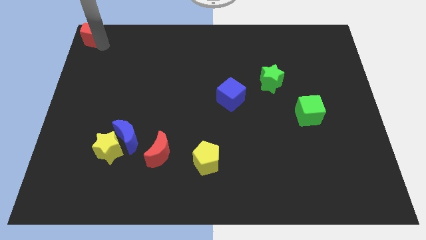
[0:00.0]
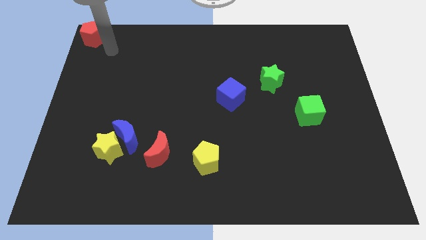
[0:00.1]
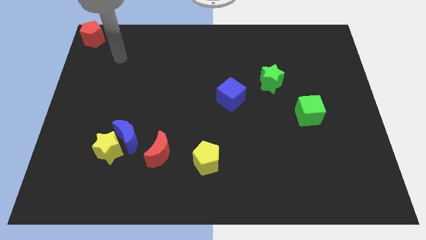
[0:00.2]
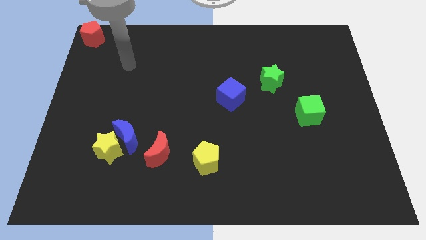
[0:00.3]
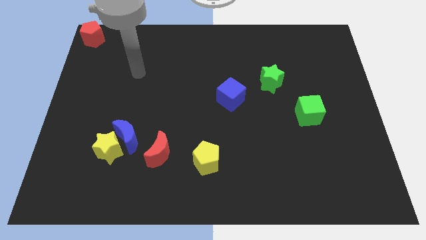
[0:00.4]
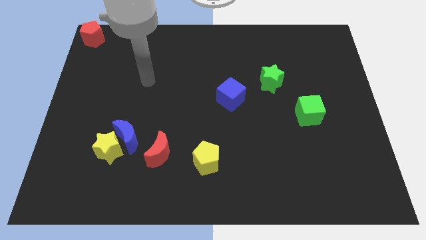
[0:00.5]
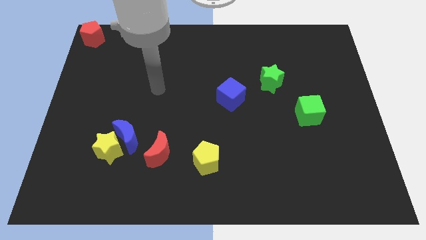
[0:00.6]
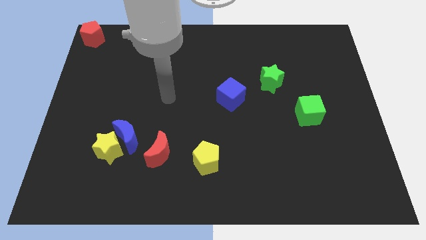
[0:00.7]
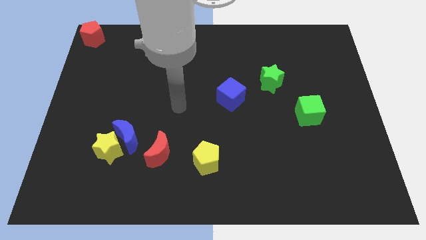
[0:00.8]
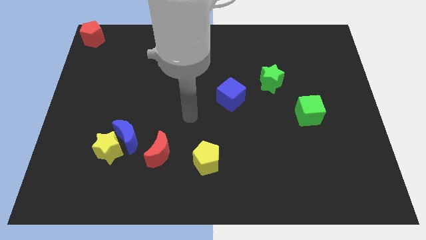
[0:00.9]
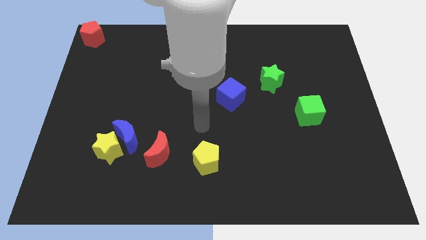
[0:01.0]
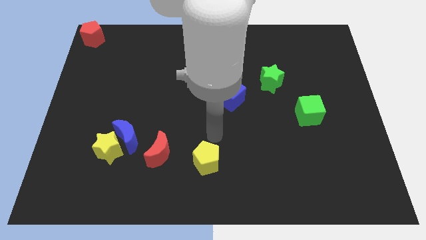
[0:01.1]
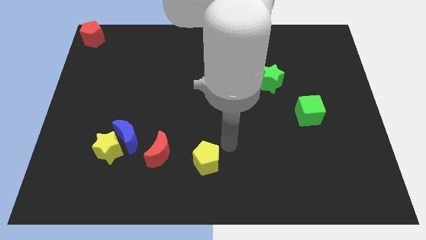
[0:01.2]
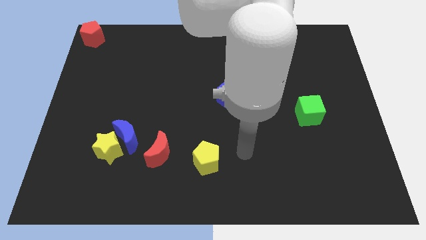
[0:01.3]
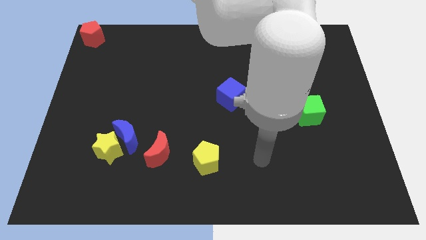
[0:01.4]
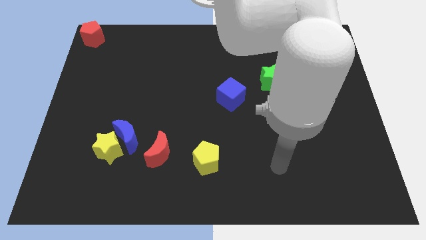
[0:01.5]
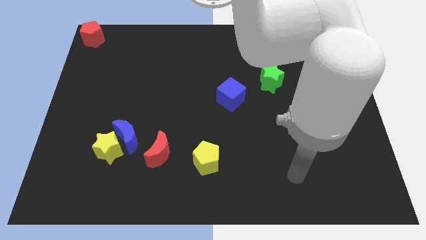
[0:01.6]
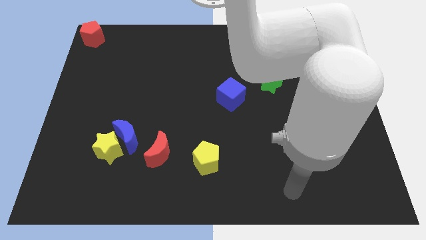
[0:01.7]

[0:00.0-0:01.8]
move your arm away from the red pentagon

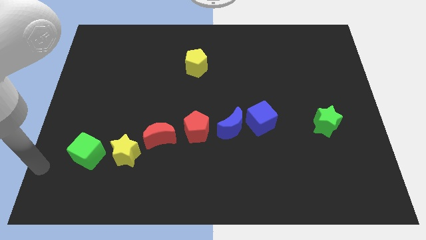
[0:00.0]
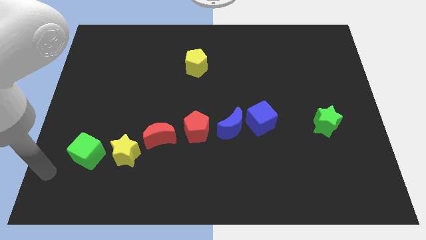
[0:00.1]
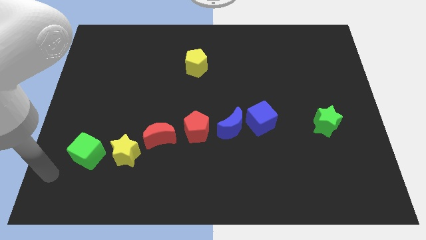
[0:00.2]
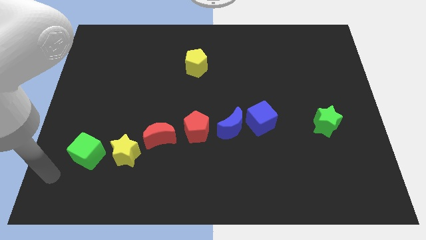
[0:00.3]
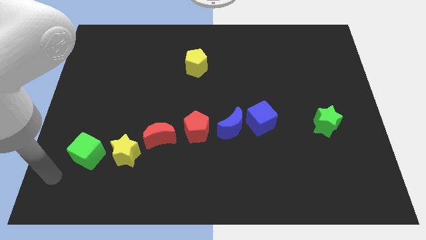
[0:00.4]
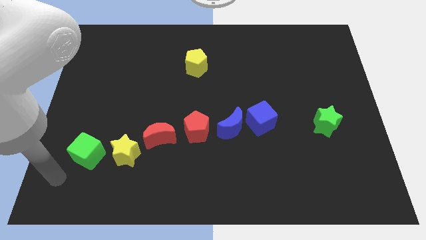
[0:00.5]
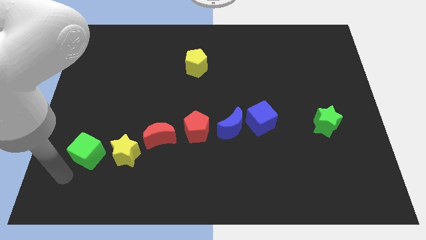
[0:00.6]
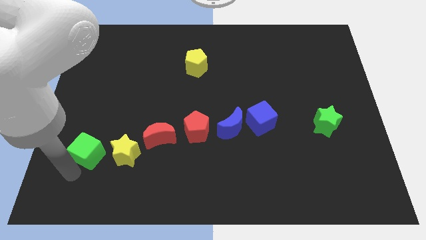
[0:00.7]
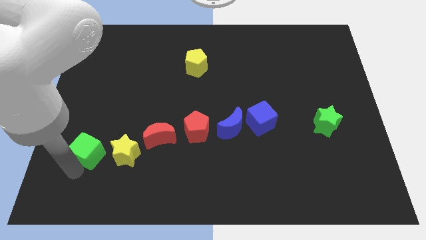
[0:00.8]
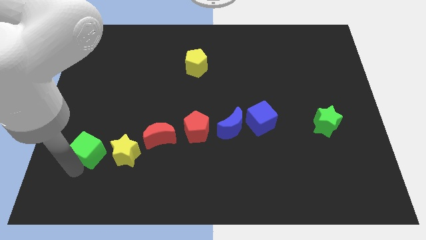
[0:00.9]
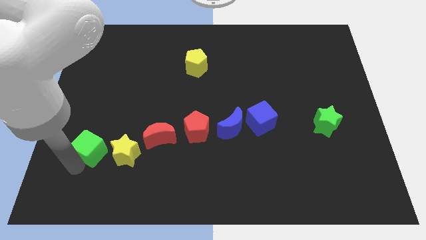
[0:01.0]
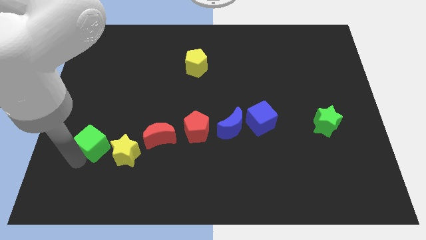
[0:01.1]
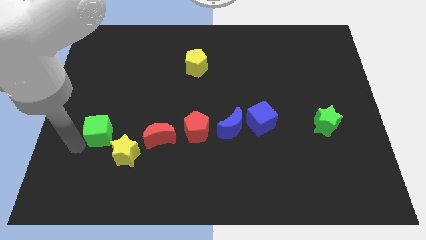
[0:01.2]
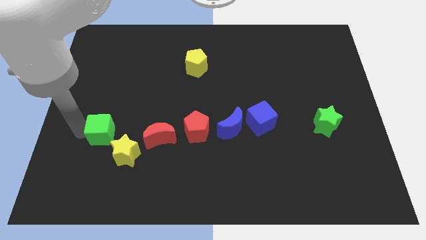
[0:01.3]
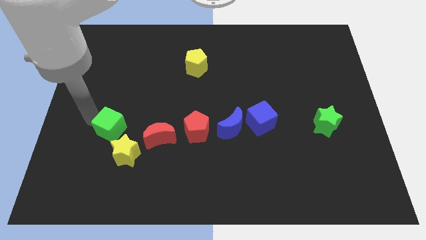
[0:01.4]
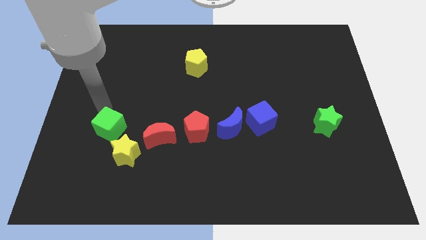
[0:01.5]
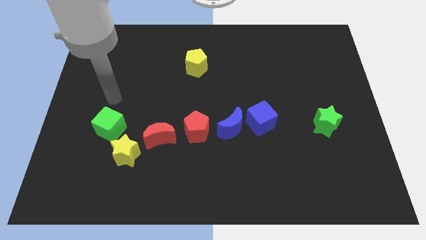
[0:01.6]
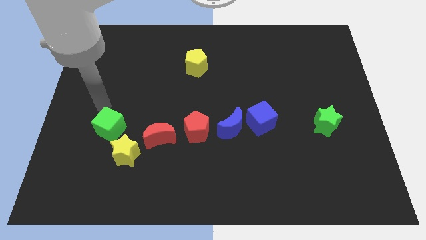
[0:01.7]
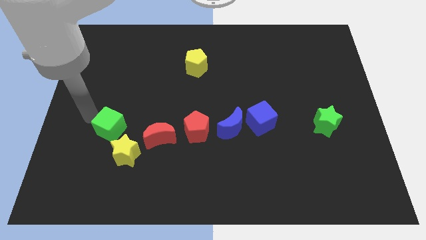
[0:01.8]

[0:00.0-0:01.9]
place the green cube above the yellow star

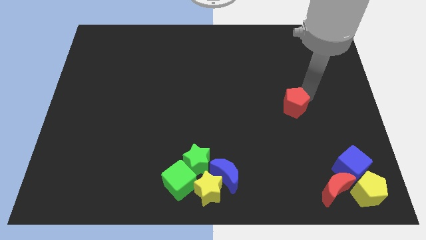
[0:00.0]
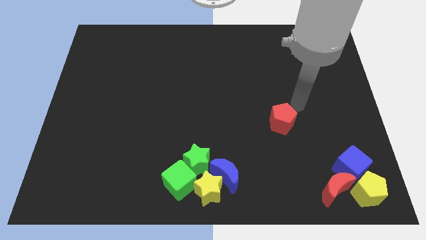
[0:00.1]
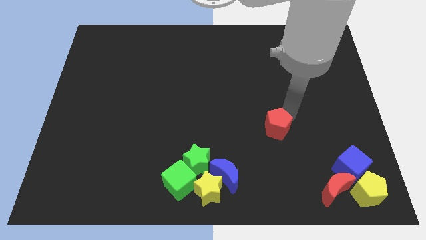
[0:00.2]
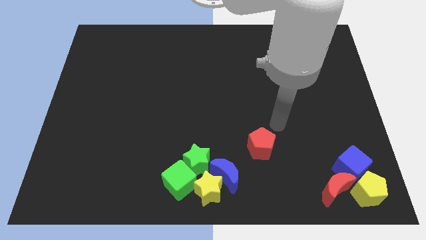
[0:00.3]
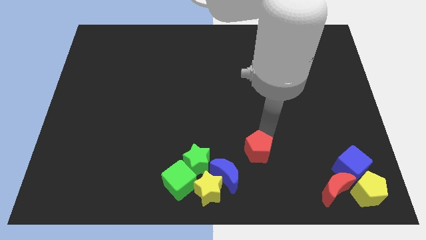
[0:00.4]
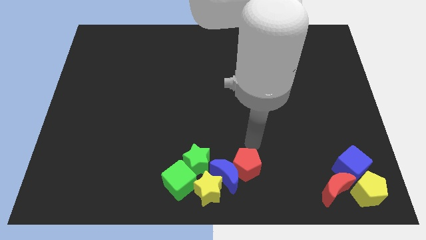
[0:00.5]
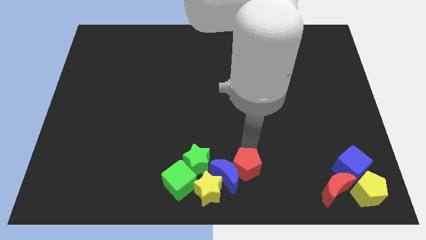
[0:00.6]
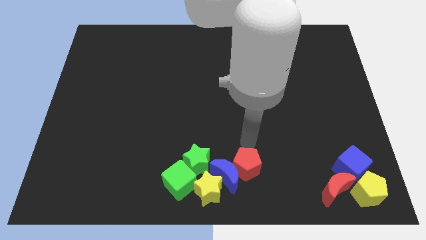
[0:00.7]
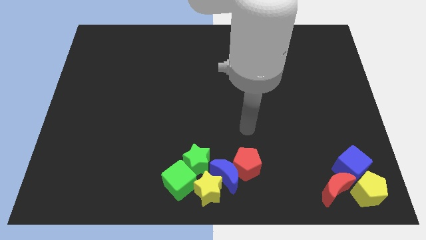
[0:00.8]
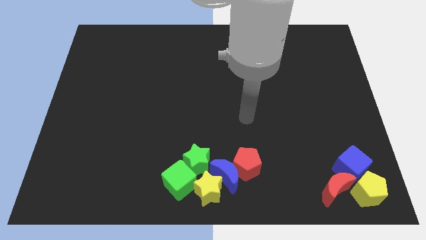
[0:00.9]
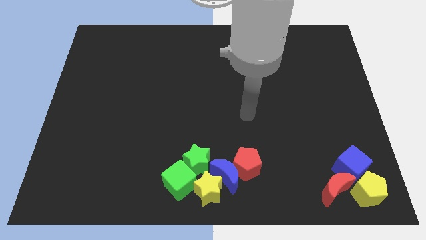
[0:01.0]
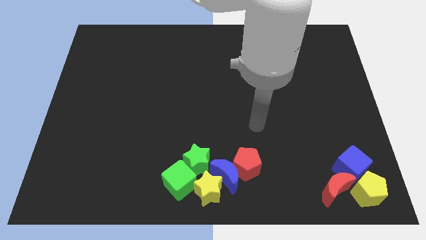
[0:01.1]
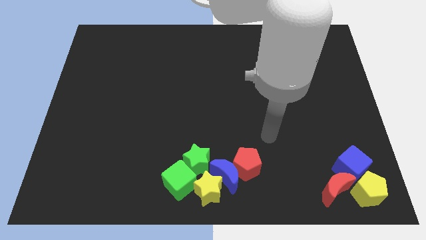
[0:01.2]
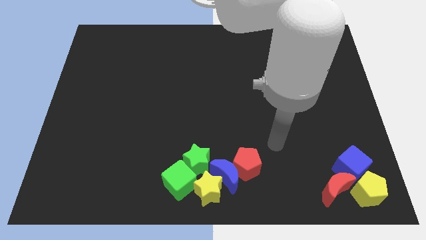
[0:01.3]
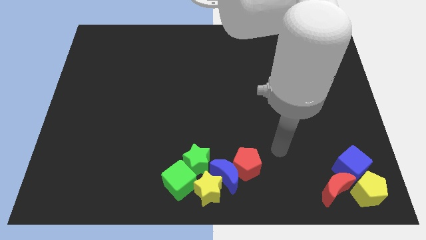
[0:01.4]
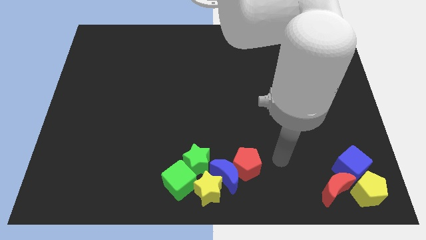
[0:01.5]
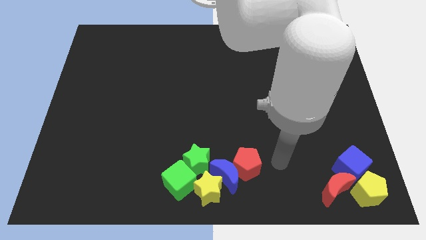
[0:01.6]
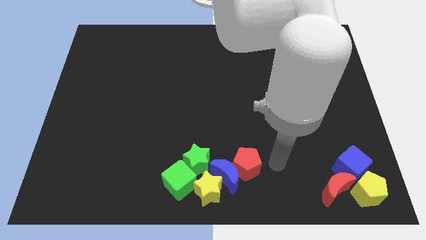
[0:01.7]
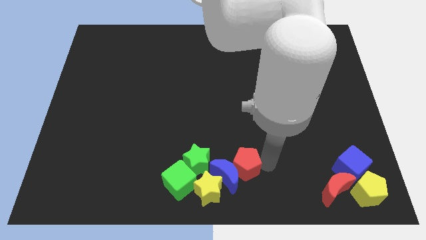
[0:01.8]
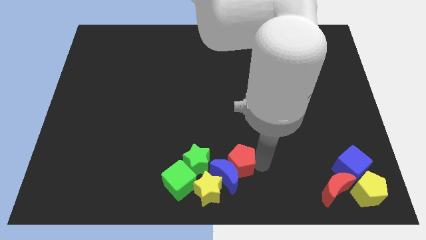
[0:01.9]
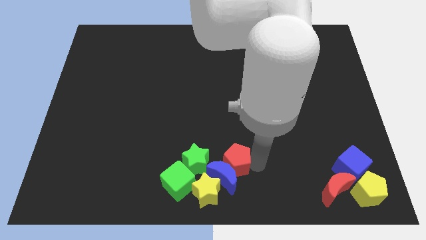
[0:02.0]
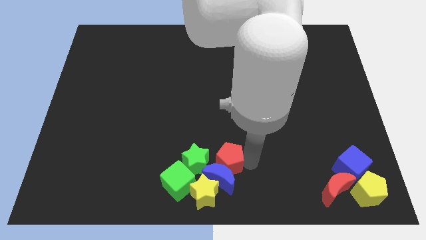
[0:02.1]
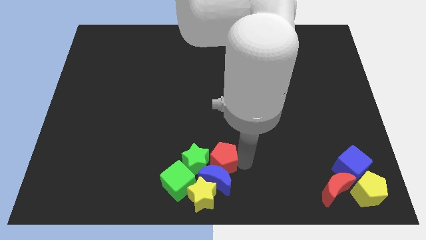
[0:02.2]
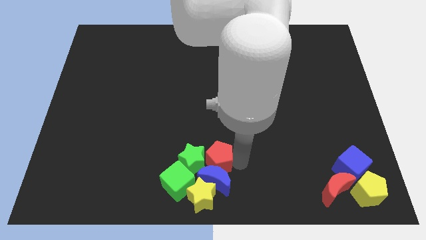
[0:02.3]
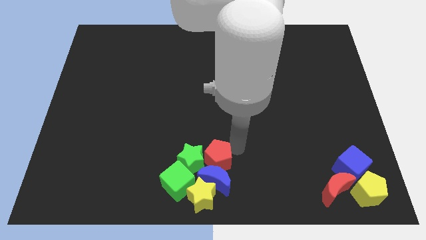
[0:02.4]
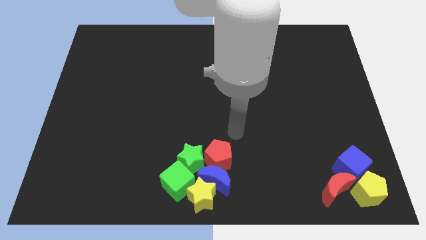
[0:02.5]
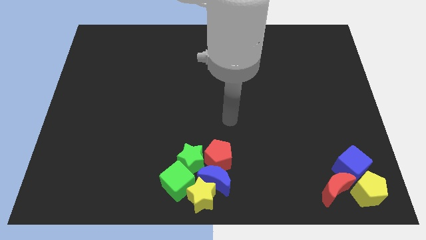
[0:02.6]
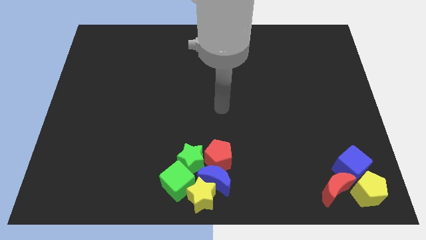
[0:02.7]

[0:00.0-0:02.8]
push the red pentagon into the blue moon

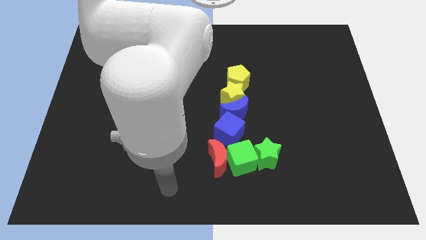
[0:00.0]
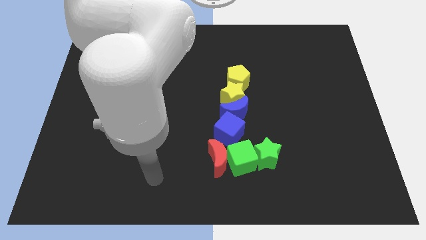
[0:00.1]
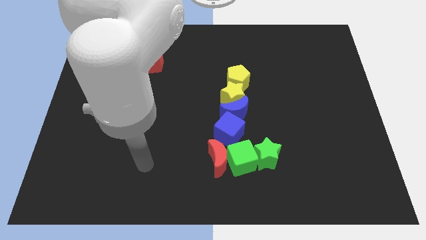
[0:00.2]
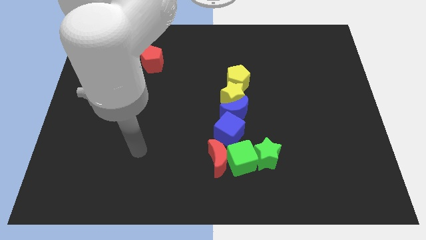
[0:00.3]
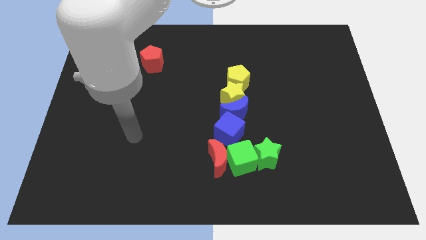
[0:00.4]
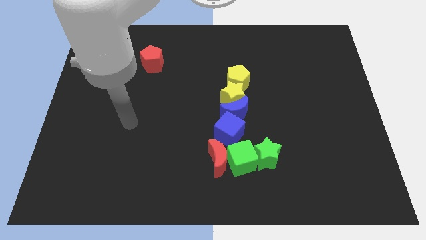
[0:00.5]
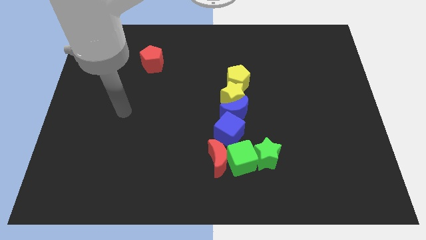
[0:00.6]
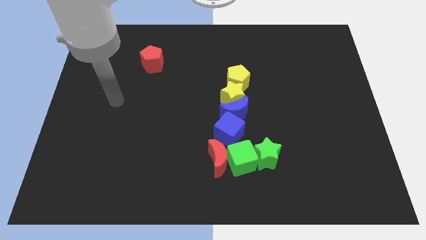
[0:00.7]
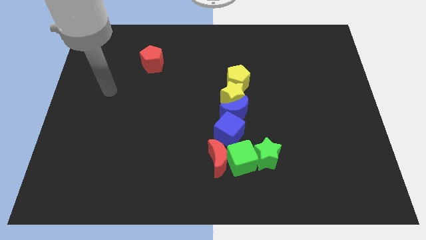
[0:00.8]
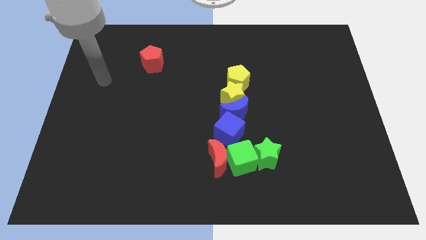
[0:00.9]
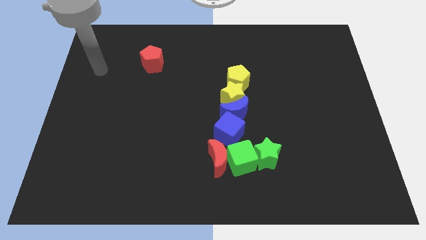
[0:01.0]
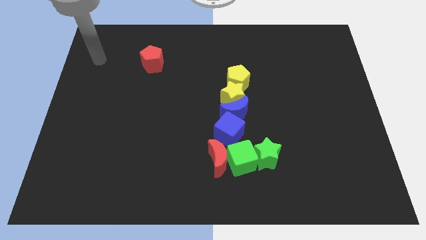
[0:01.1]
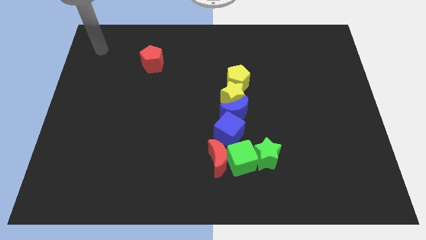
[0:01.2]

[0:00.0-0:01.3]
place arm at the top left corner of boards

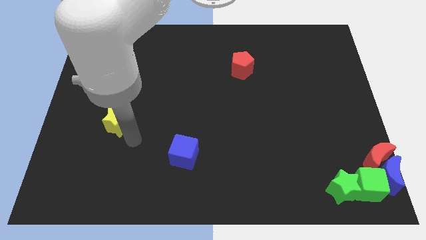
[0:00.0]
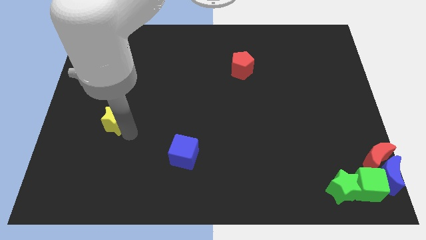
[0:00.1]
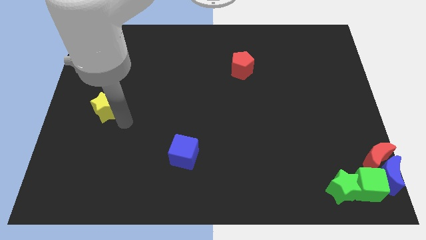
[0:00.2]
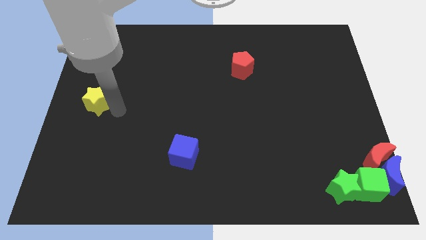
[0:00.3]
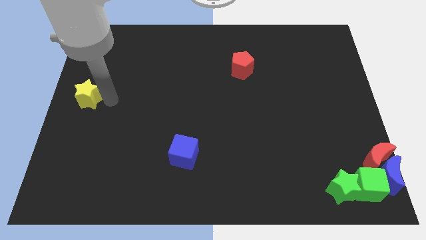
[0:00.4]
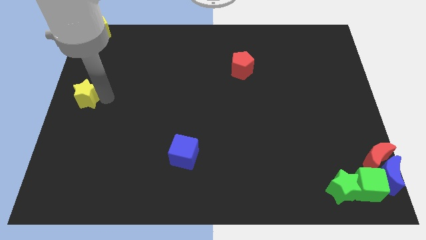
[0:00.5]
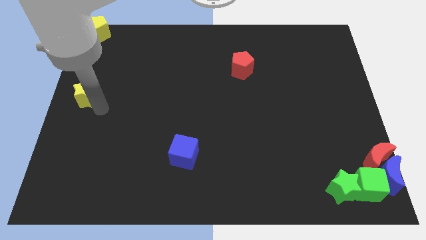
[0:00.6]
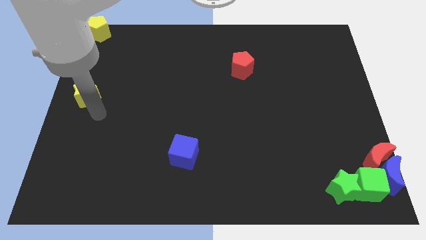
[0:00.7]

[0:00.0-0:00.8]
push the yellow star bottom to the yellow pentagon

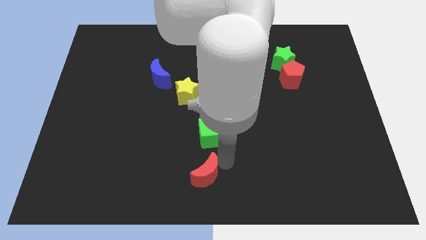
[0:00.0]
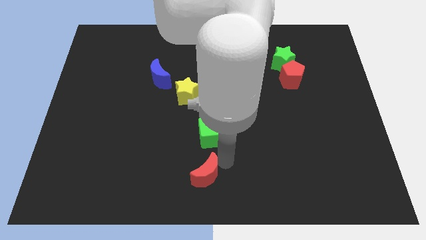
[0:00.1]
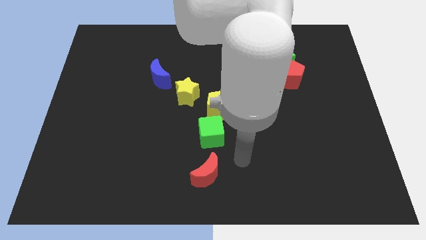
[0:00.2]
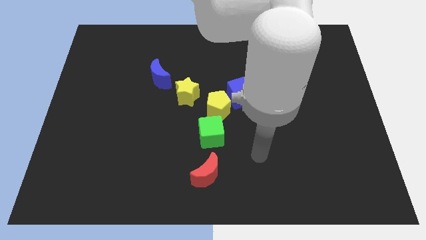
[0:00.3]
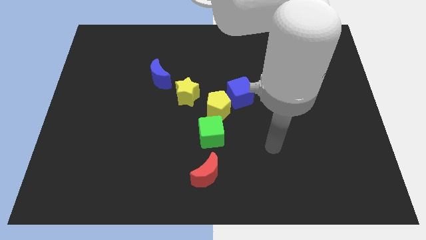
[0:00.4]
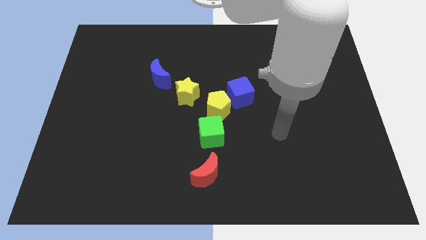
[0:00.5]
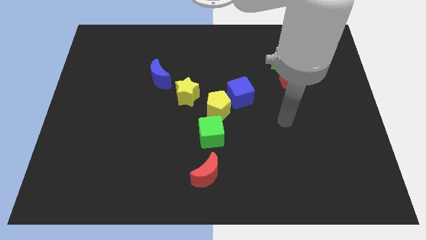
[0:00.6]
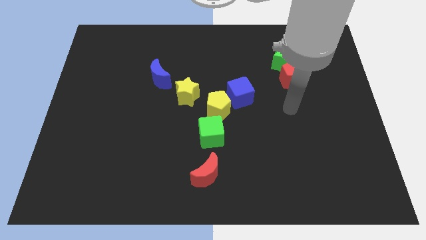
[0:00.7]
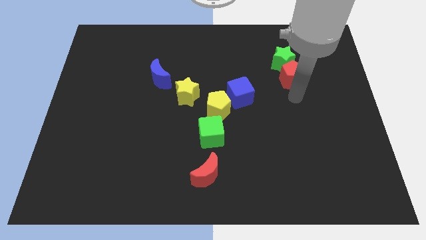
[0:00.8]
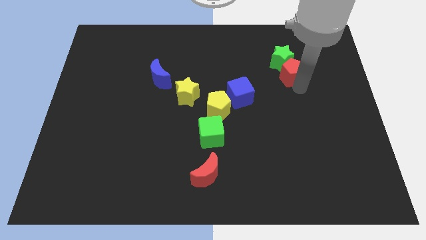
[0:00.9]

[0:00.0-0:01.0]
move the arm away from the red moon
